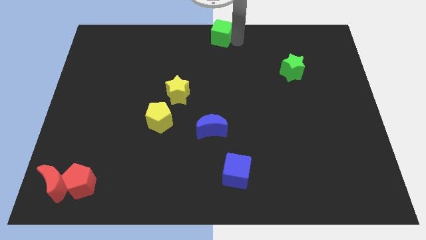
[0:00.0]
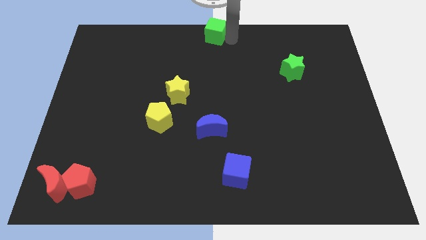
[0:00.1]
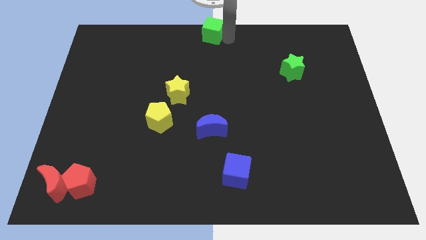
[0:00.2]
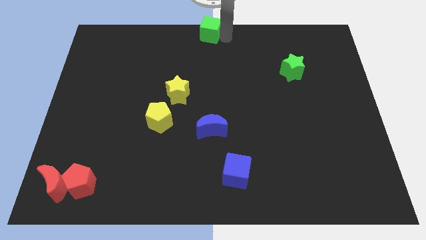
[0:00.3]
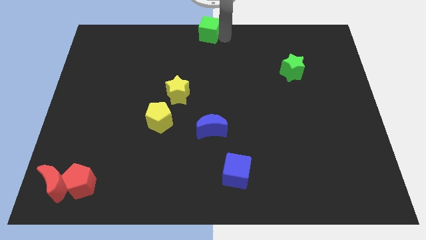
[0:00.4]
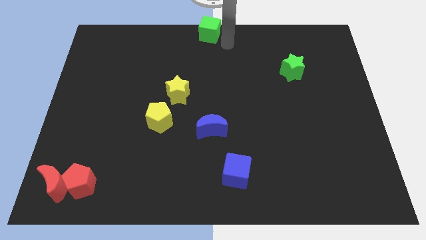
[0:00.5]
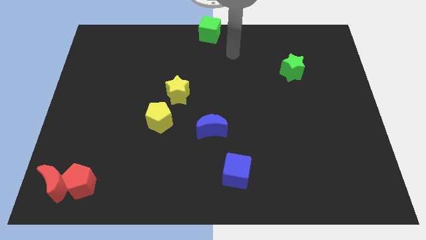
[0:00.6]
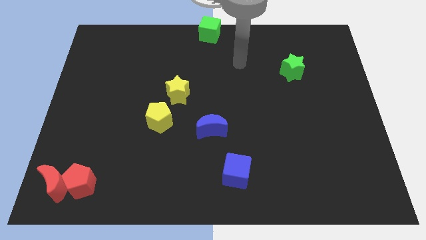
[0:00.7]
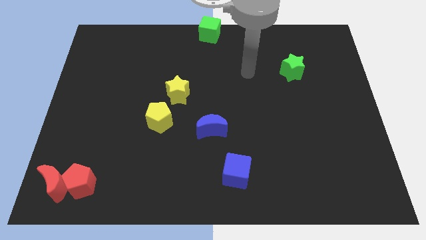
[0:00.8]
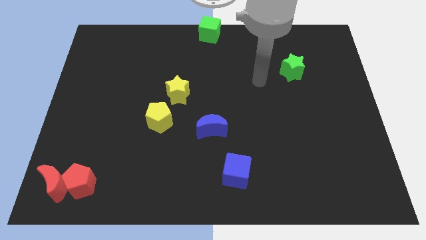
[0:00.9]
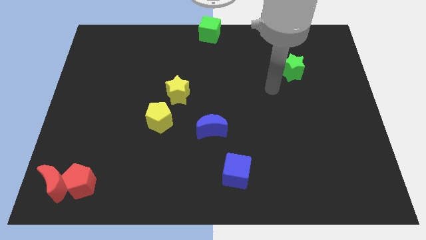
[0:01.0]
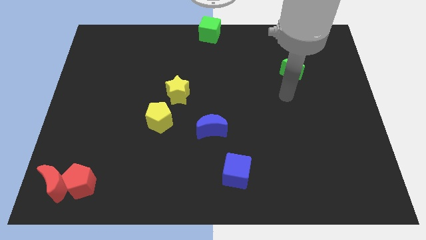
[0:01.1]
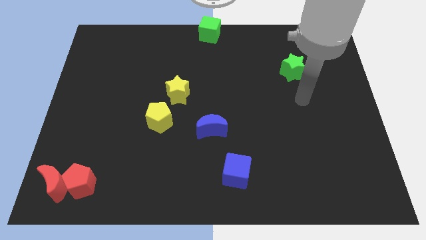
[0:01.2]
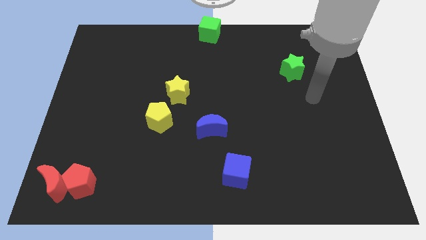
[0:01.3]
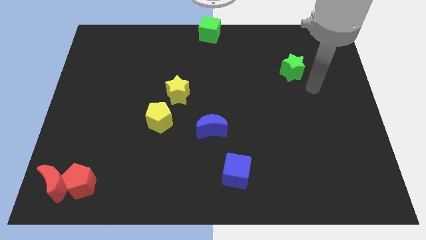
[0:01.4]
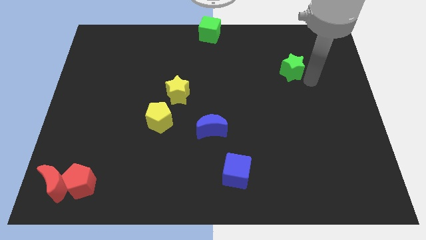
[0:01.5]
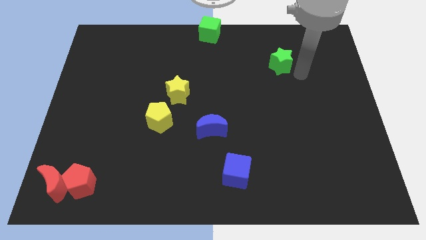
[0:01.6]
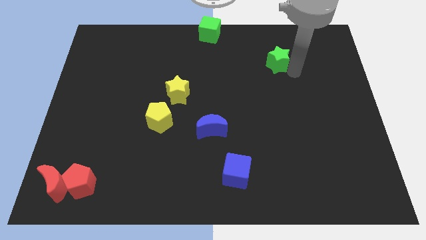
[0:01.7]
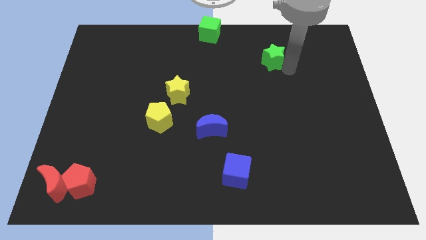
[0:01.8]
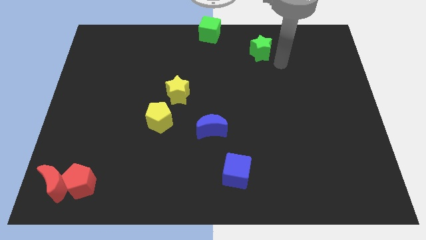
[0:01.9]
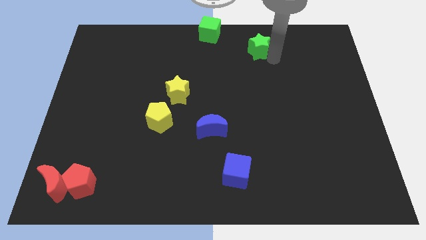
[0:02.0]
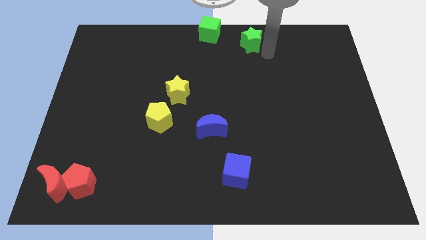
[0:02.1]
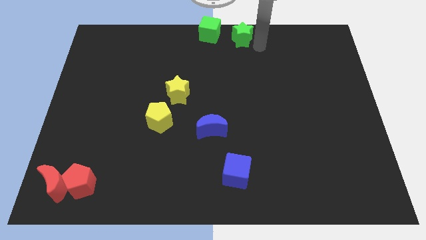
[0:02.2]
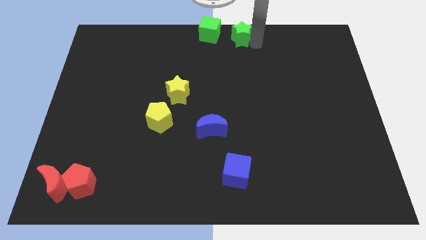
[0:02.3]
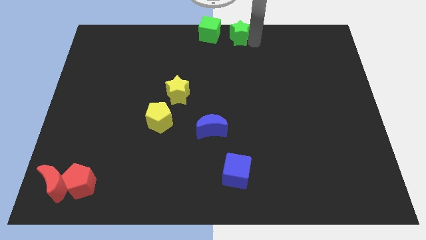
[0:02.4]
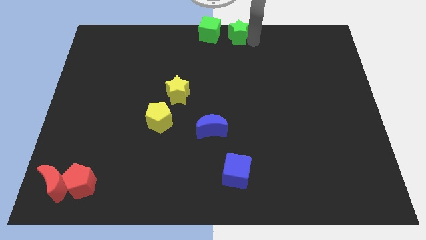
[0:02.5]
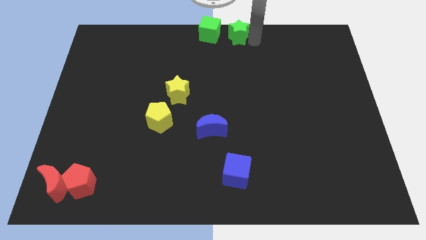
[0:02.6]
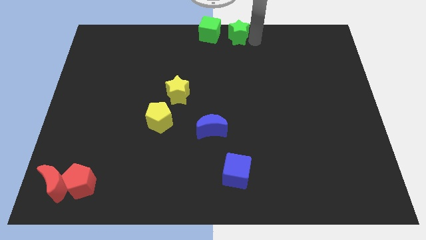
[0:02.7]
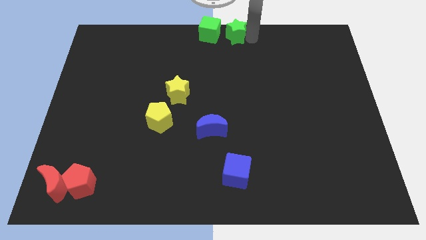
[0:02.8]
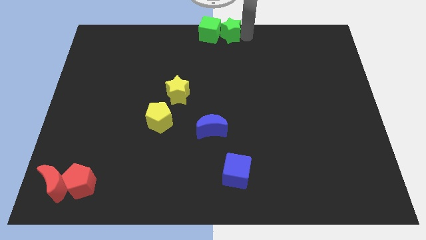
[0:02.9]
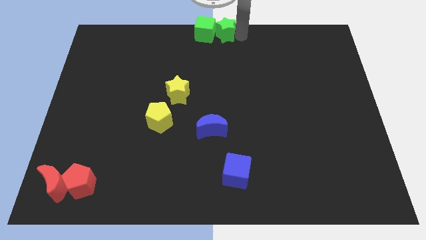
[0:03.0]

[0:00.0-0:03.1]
place the green star right on the green cube

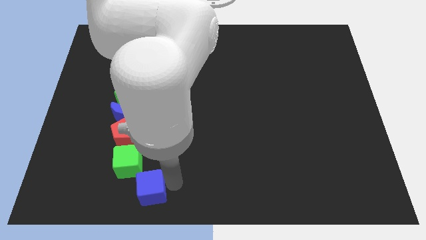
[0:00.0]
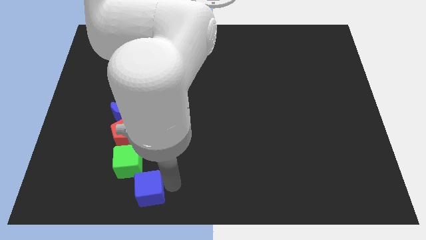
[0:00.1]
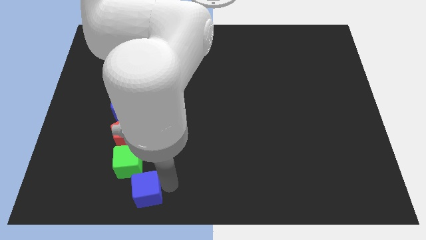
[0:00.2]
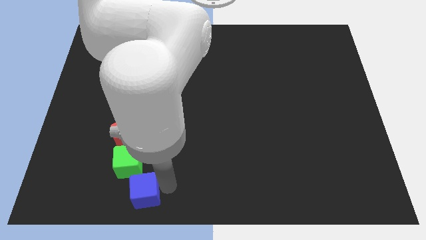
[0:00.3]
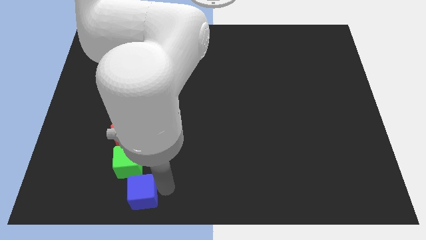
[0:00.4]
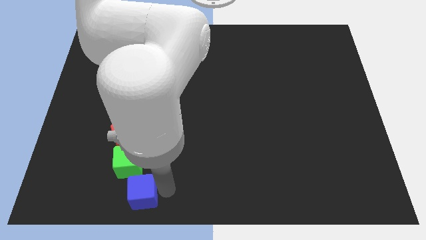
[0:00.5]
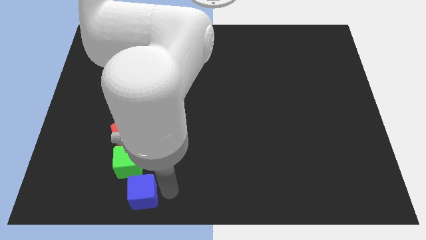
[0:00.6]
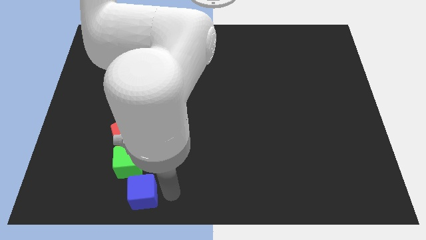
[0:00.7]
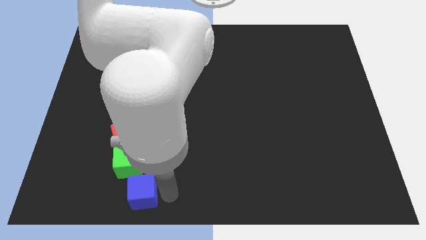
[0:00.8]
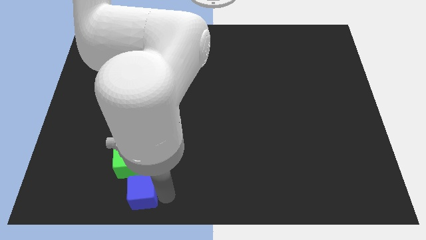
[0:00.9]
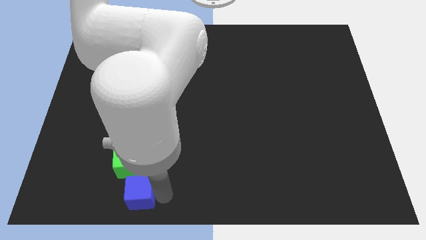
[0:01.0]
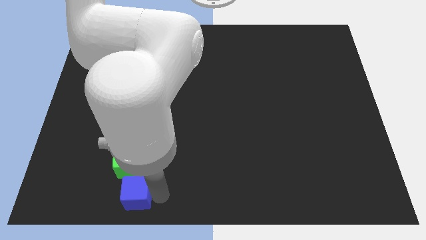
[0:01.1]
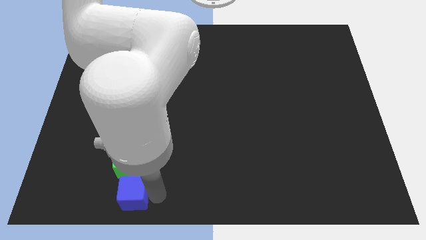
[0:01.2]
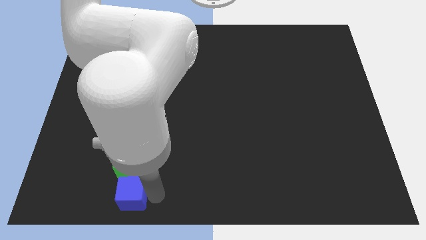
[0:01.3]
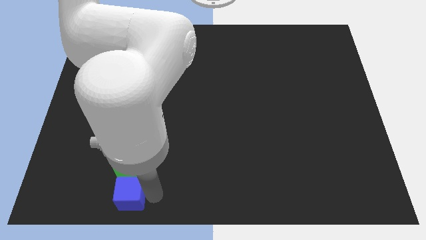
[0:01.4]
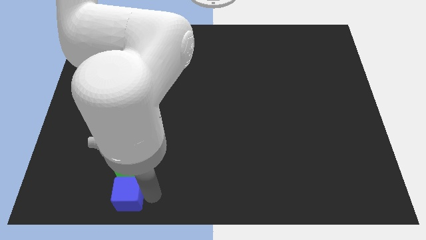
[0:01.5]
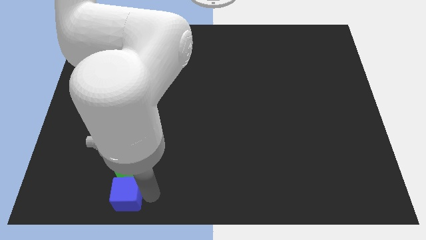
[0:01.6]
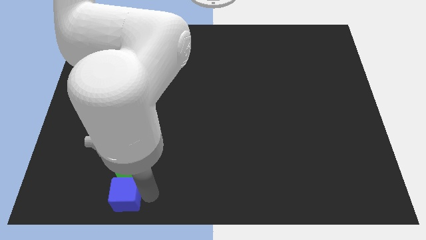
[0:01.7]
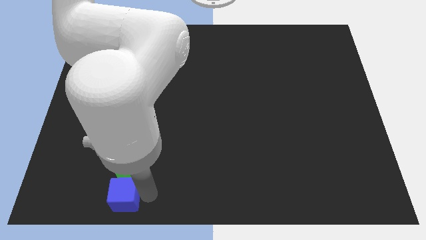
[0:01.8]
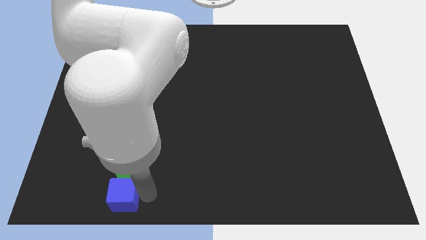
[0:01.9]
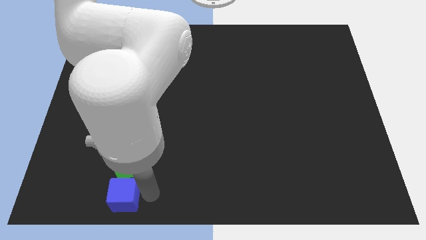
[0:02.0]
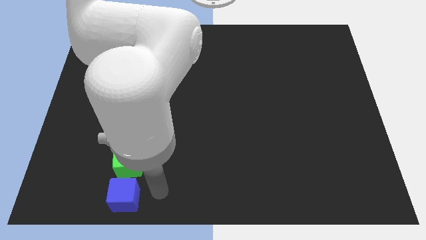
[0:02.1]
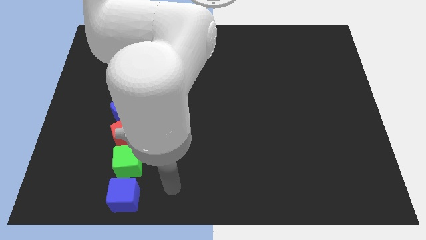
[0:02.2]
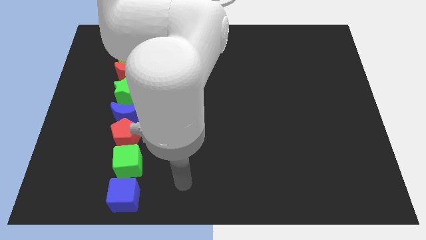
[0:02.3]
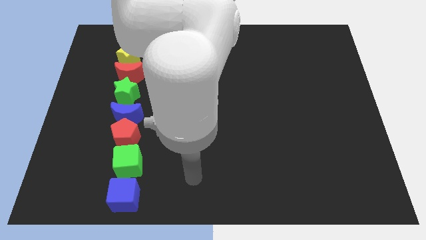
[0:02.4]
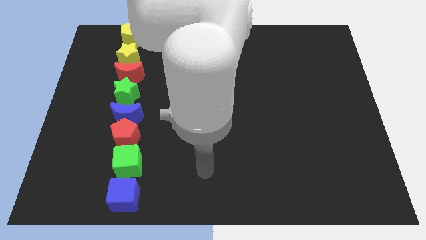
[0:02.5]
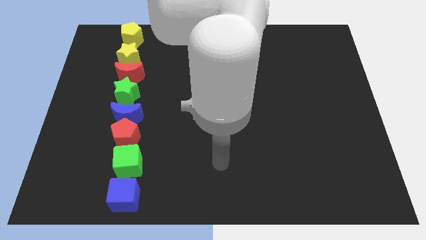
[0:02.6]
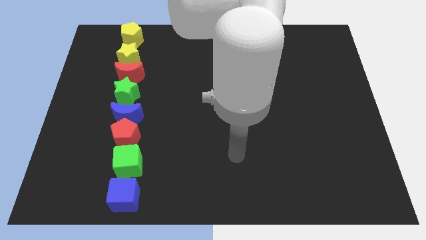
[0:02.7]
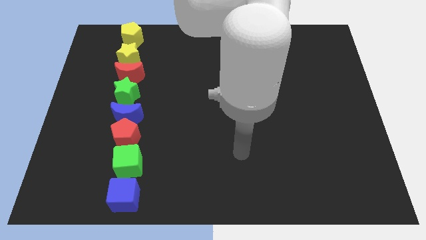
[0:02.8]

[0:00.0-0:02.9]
move blue cube below the green cube

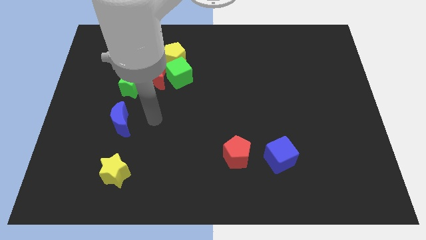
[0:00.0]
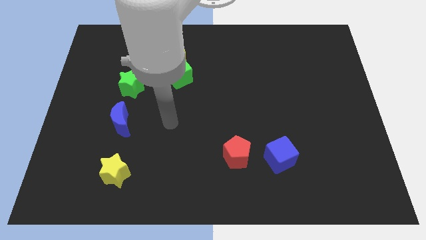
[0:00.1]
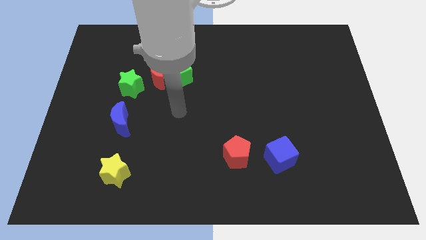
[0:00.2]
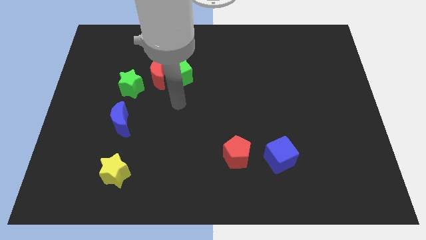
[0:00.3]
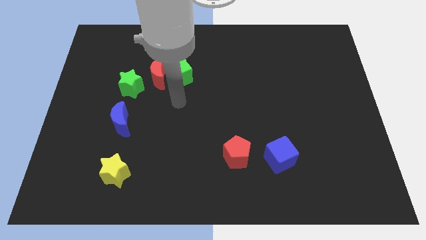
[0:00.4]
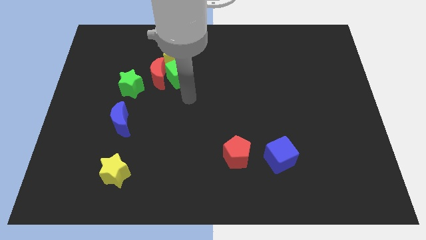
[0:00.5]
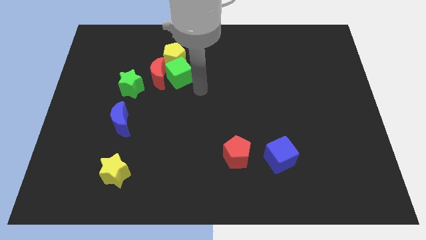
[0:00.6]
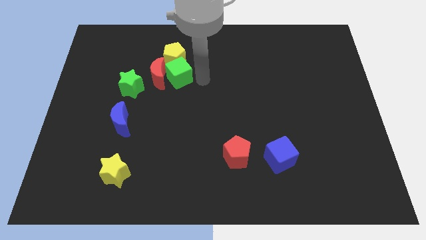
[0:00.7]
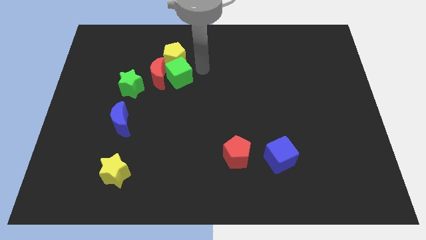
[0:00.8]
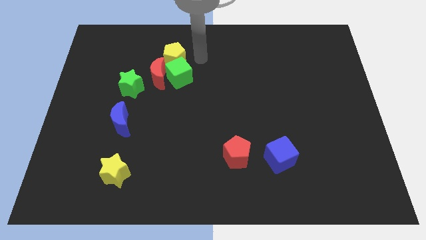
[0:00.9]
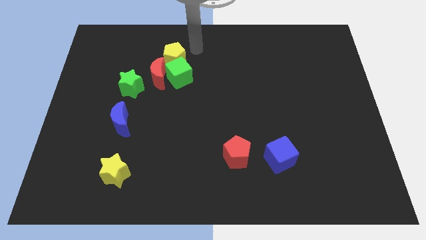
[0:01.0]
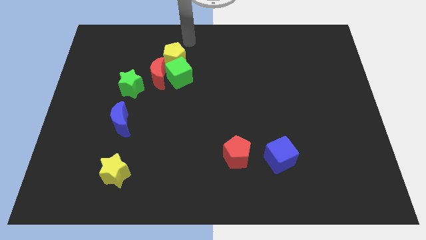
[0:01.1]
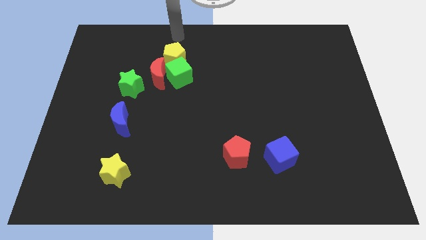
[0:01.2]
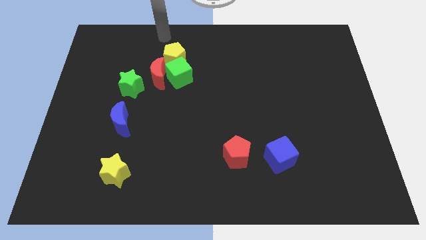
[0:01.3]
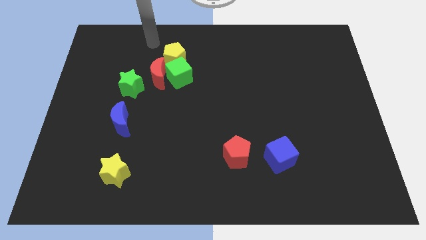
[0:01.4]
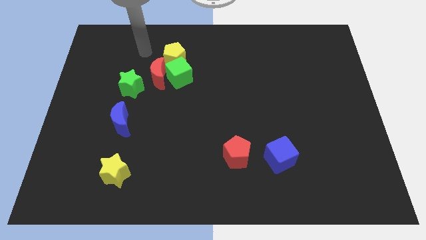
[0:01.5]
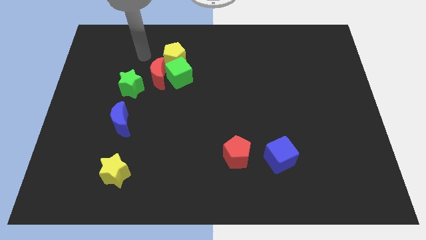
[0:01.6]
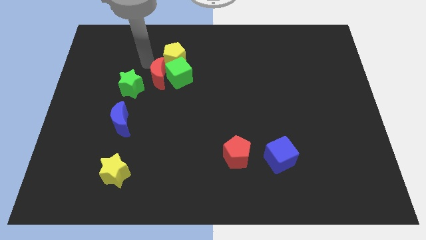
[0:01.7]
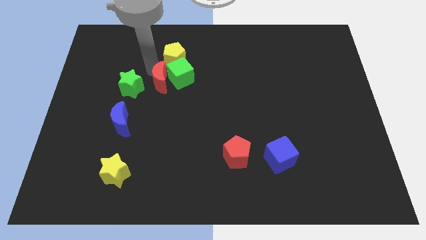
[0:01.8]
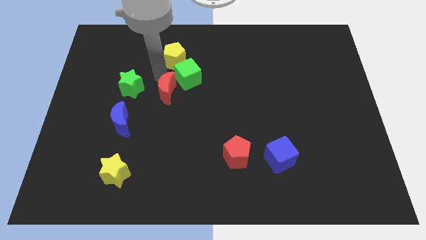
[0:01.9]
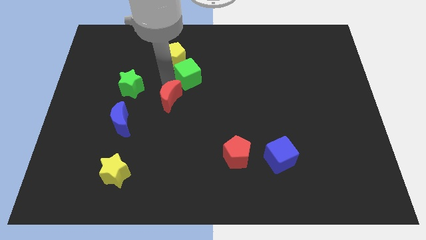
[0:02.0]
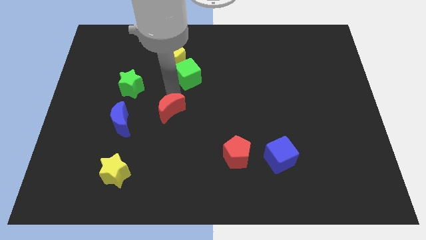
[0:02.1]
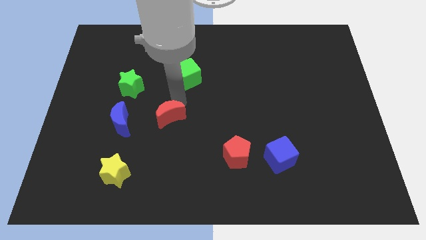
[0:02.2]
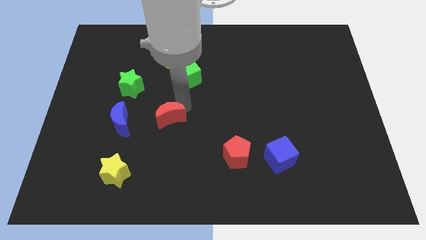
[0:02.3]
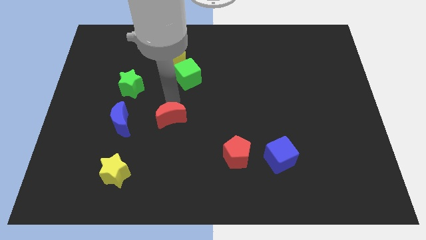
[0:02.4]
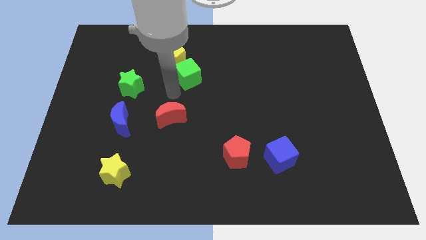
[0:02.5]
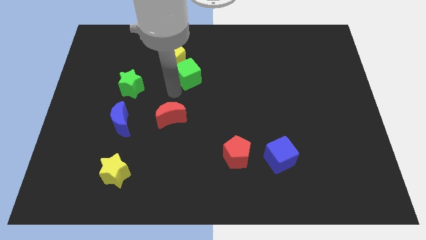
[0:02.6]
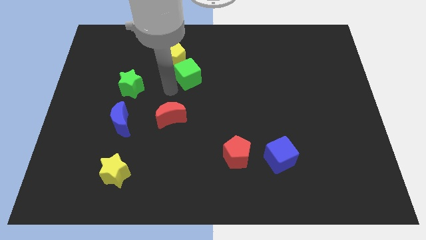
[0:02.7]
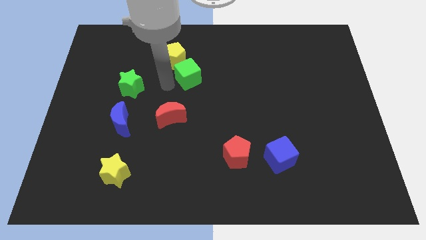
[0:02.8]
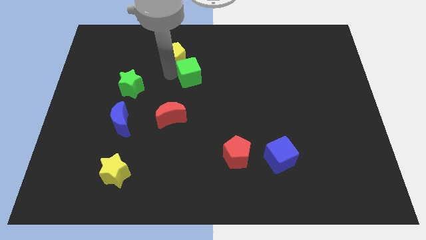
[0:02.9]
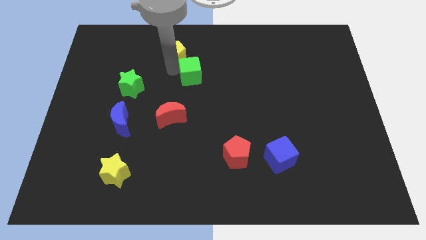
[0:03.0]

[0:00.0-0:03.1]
place red moon to the center
